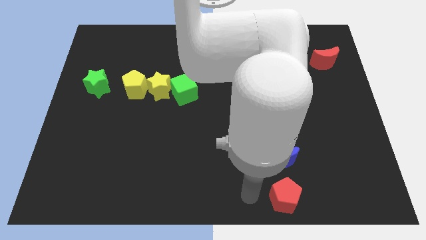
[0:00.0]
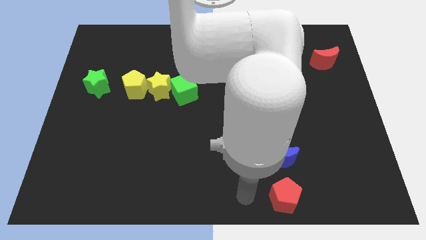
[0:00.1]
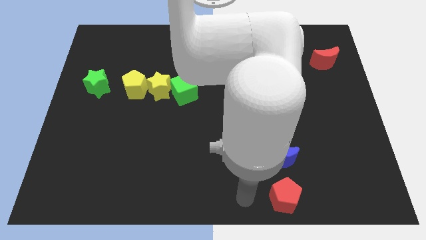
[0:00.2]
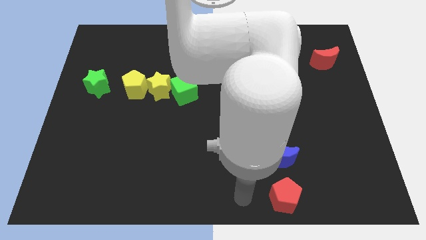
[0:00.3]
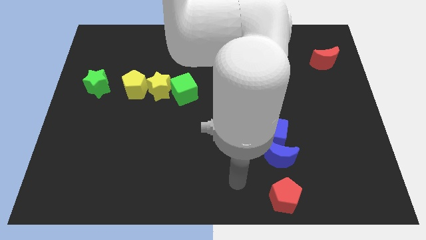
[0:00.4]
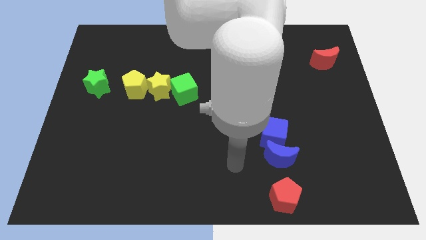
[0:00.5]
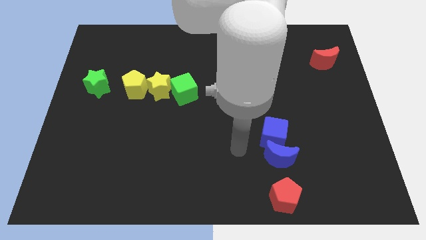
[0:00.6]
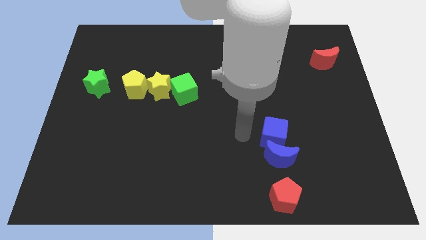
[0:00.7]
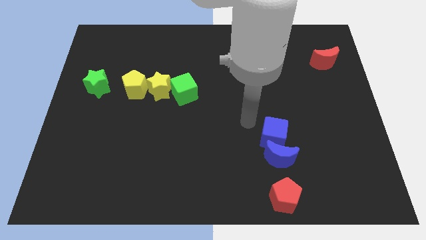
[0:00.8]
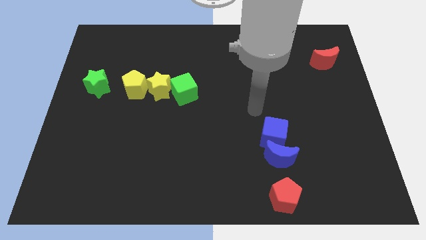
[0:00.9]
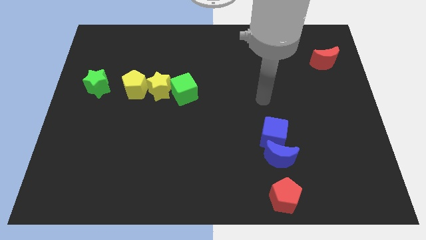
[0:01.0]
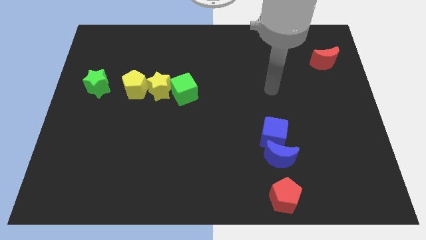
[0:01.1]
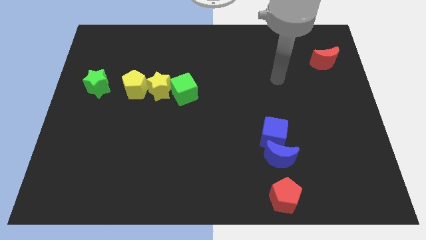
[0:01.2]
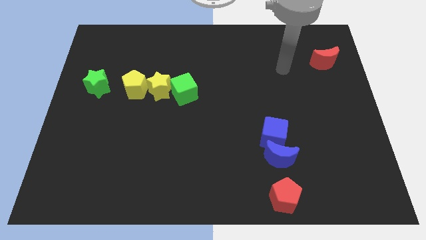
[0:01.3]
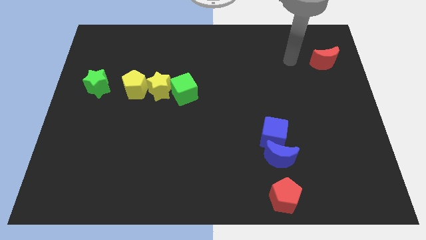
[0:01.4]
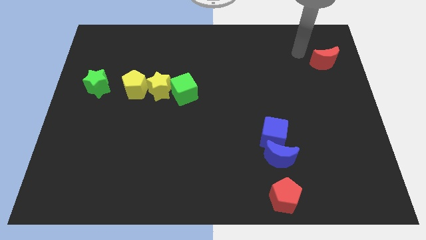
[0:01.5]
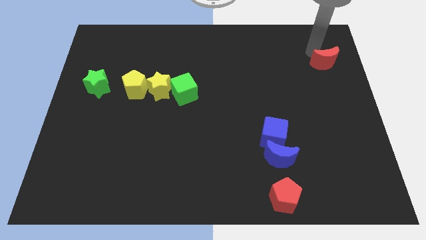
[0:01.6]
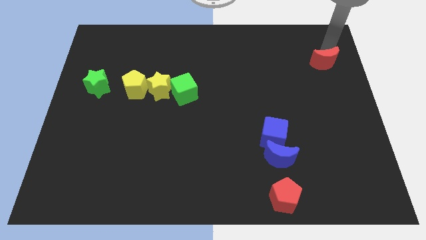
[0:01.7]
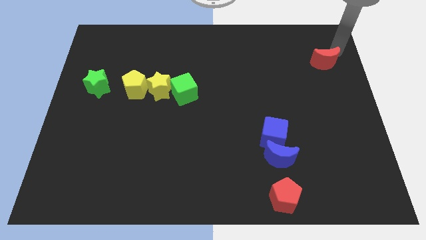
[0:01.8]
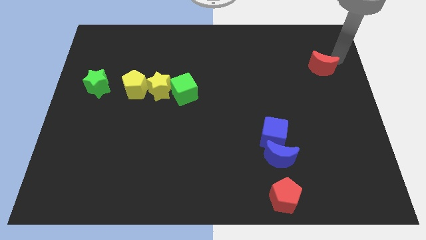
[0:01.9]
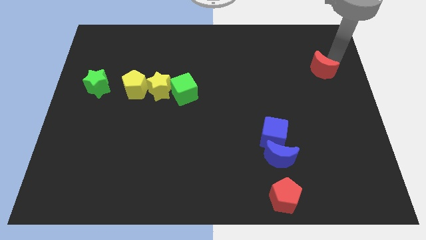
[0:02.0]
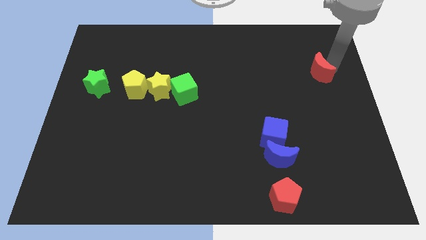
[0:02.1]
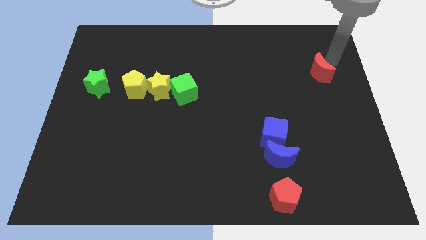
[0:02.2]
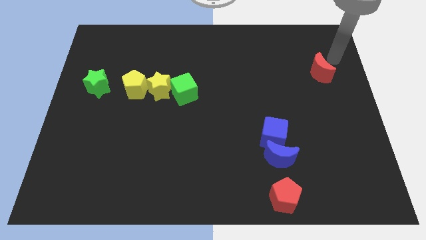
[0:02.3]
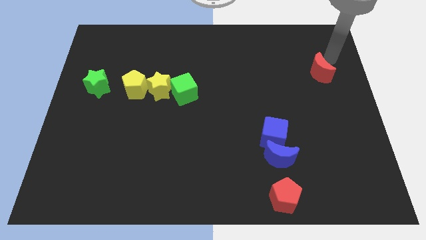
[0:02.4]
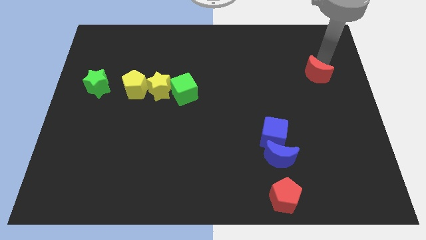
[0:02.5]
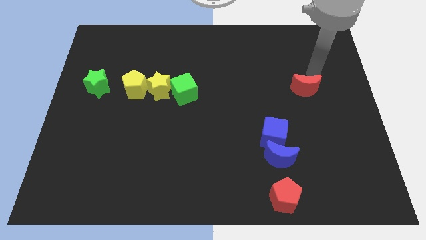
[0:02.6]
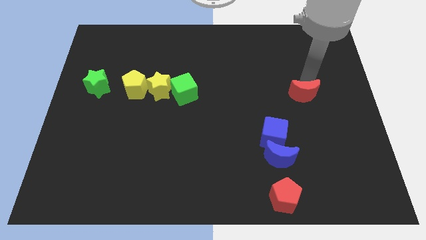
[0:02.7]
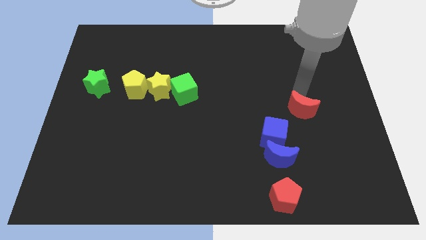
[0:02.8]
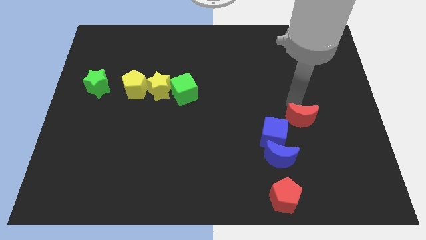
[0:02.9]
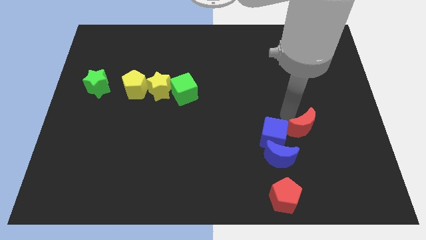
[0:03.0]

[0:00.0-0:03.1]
move red crescent on the top right side of the blue cube

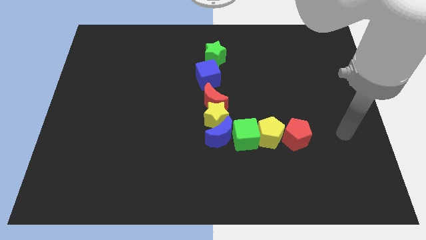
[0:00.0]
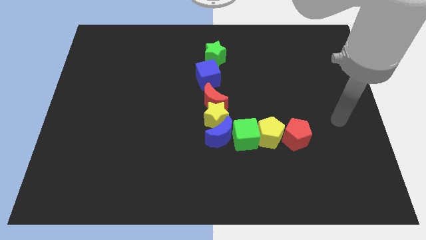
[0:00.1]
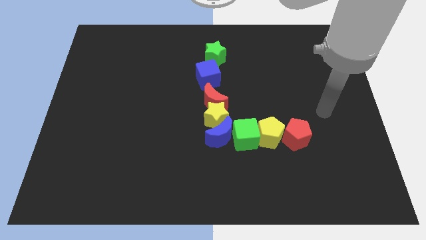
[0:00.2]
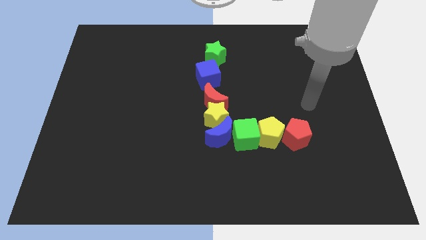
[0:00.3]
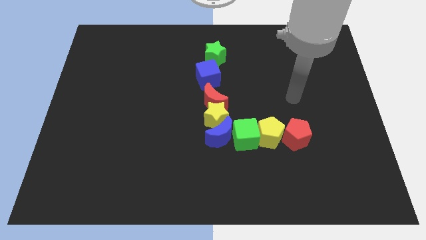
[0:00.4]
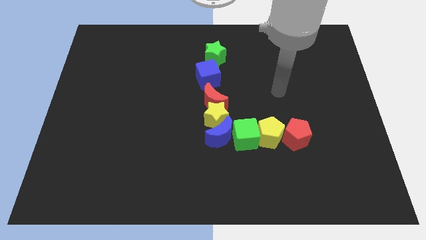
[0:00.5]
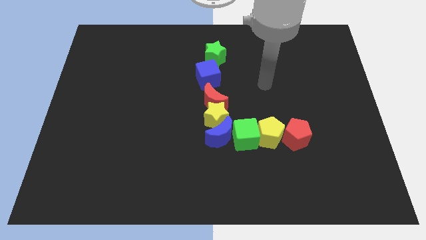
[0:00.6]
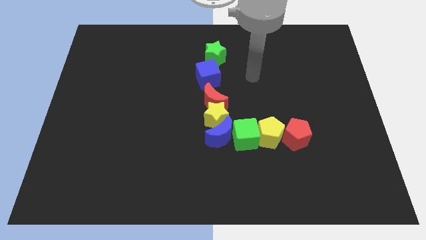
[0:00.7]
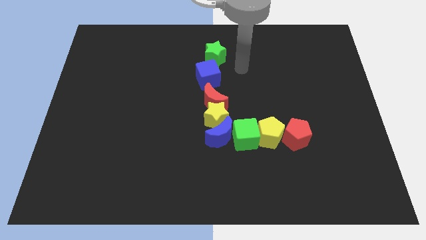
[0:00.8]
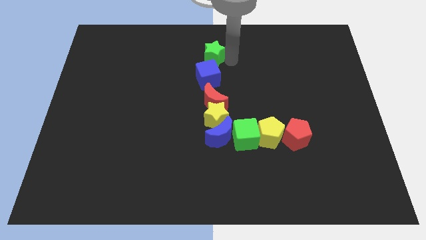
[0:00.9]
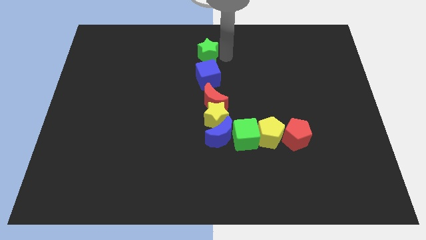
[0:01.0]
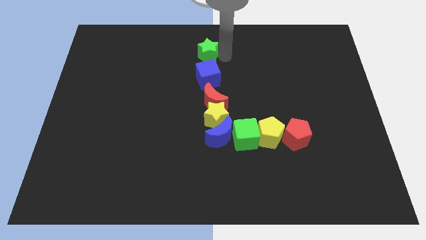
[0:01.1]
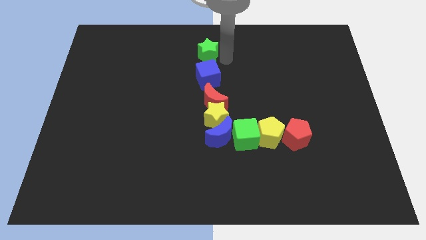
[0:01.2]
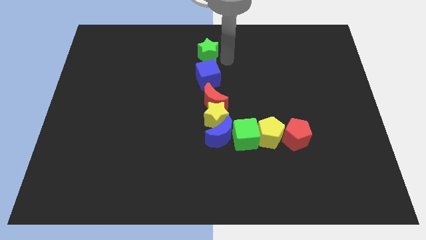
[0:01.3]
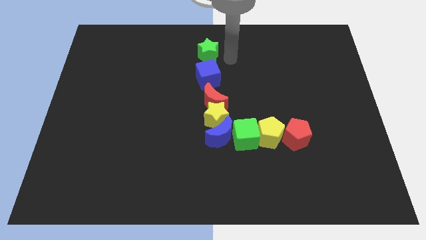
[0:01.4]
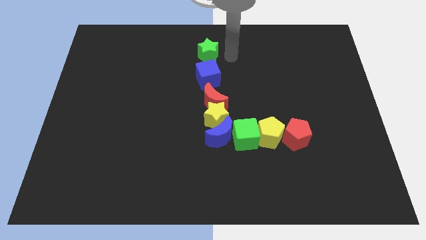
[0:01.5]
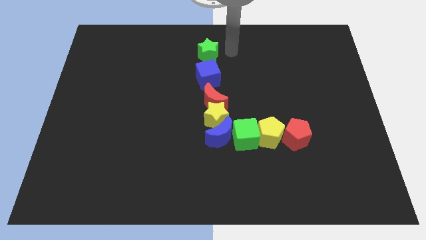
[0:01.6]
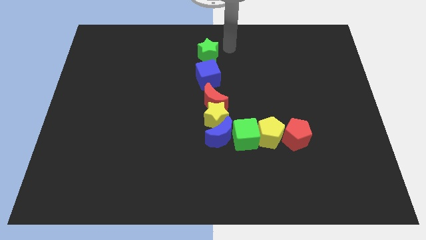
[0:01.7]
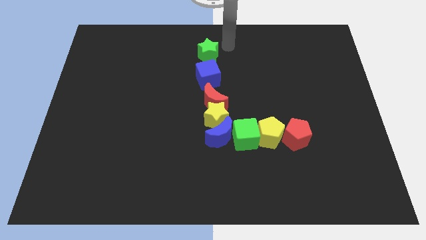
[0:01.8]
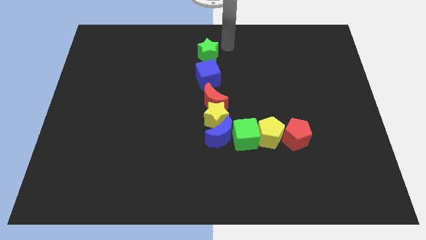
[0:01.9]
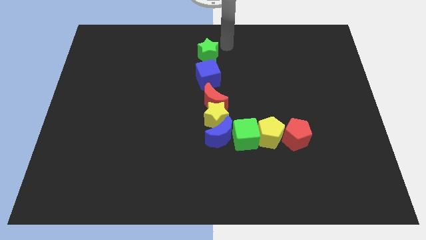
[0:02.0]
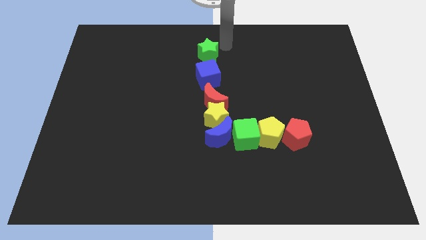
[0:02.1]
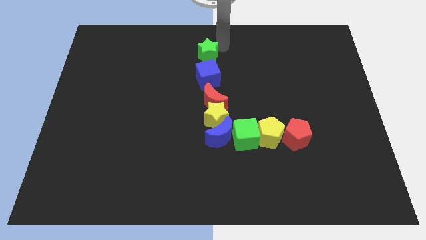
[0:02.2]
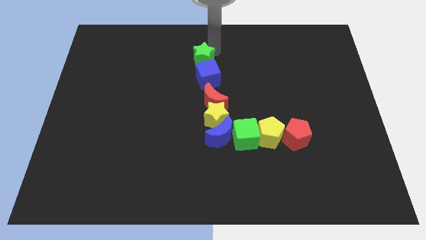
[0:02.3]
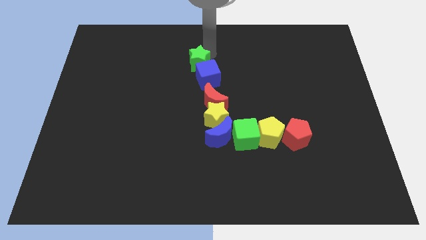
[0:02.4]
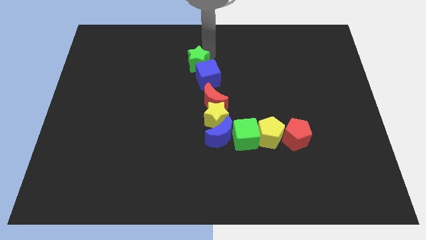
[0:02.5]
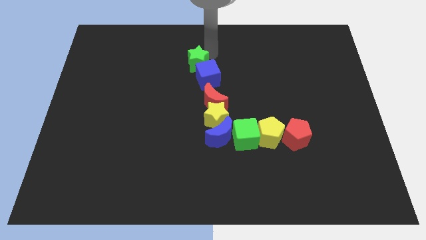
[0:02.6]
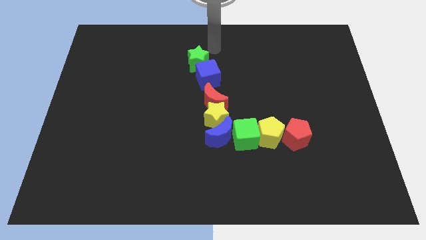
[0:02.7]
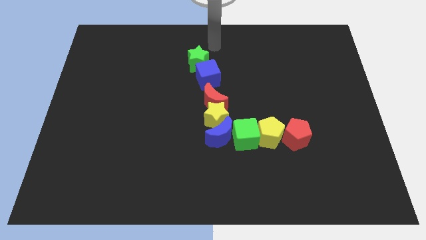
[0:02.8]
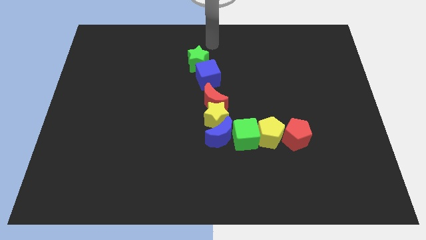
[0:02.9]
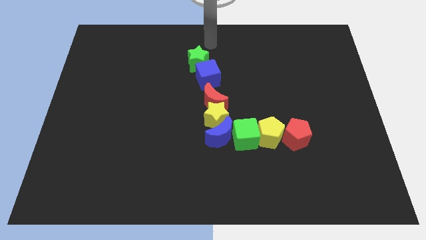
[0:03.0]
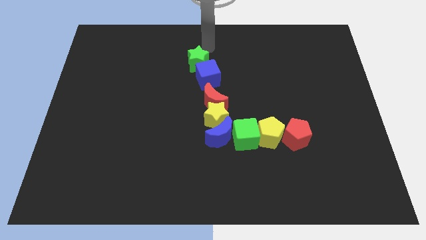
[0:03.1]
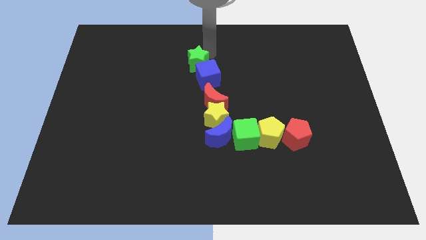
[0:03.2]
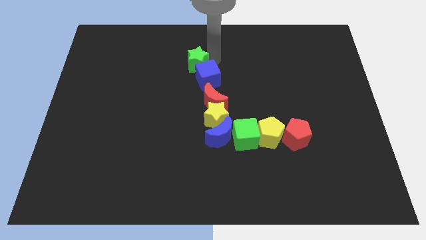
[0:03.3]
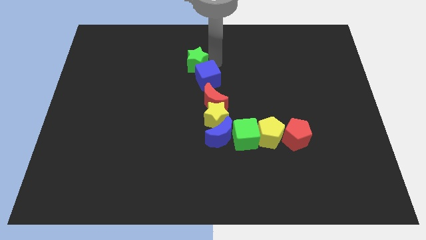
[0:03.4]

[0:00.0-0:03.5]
slide the green star to the top left side of the blue cube

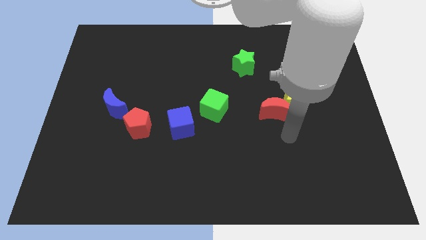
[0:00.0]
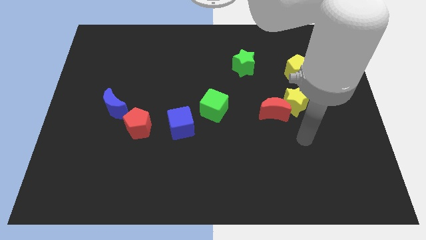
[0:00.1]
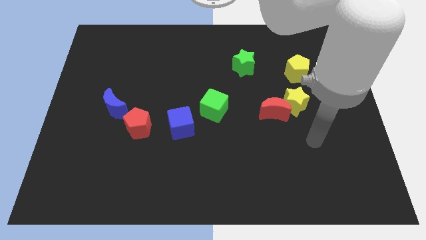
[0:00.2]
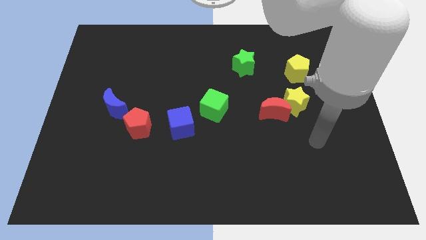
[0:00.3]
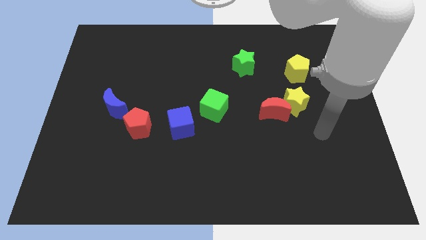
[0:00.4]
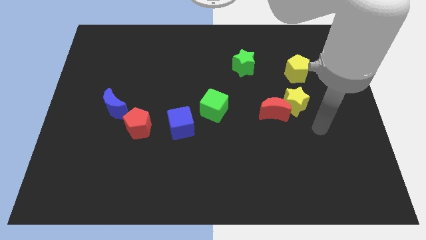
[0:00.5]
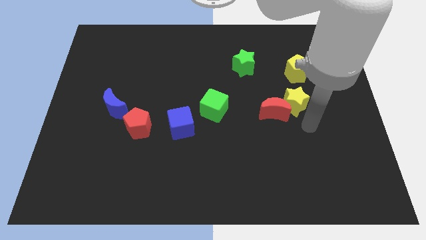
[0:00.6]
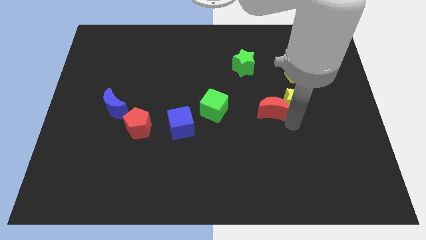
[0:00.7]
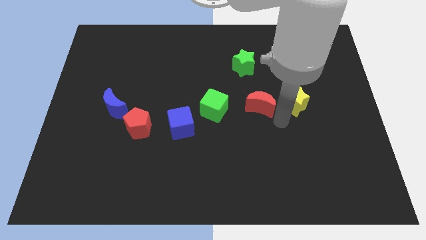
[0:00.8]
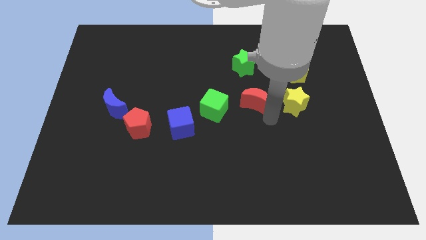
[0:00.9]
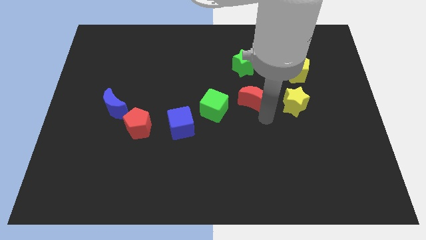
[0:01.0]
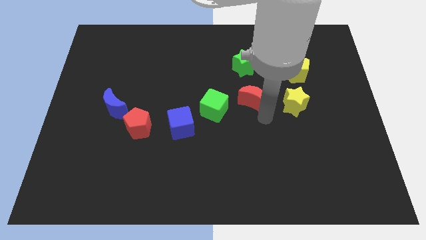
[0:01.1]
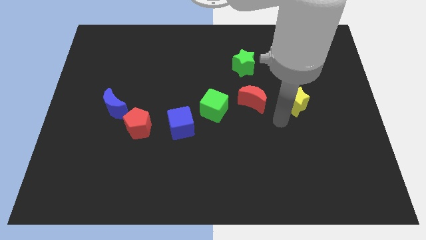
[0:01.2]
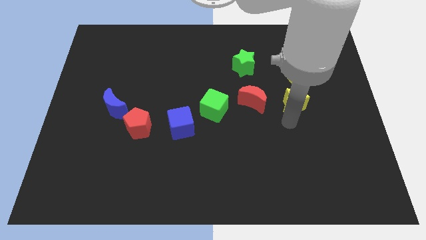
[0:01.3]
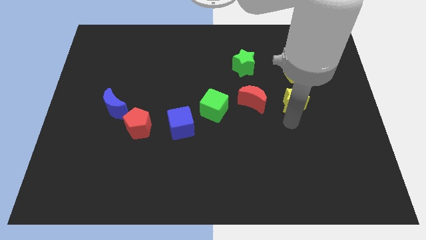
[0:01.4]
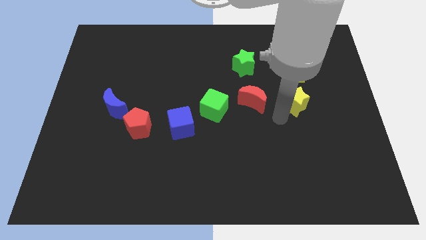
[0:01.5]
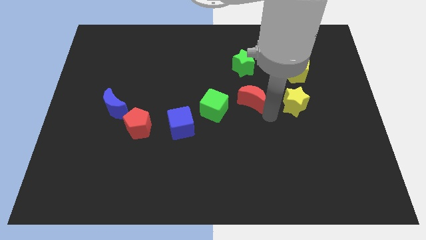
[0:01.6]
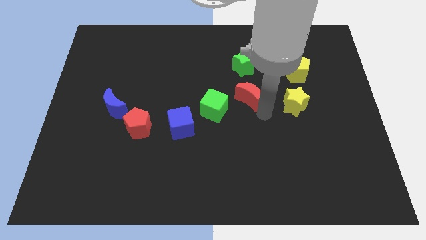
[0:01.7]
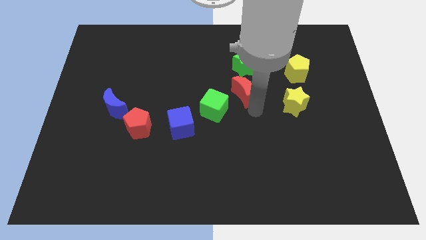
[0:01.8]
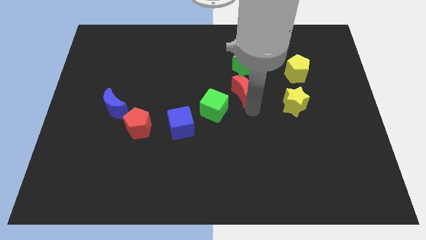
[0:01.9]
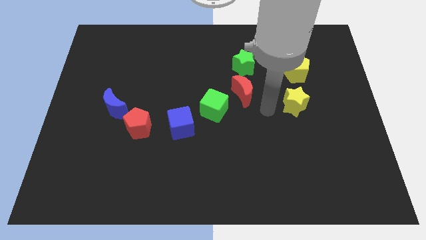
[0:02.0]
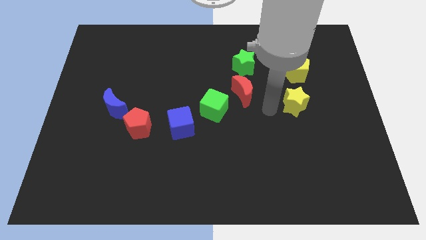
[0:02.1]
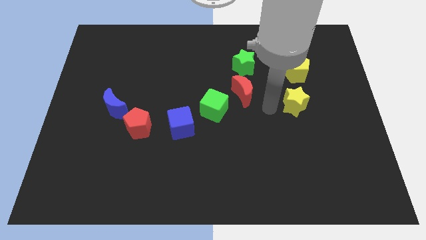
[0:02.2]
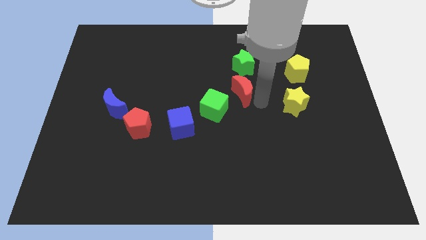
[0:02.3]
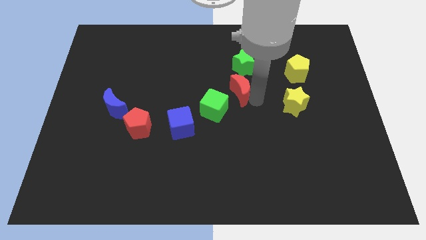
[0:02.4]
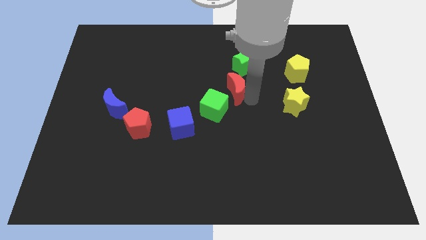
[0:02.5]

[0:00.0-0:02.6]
push the red crescent in between the green star and green cube
